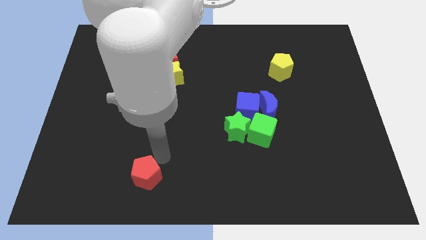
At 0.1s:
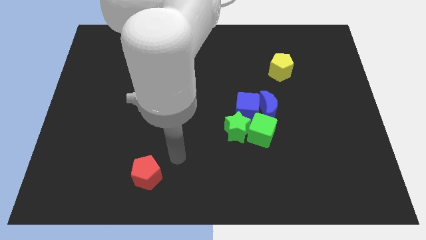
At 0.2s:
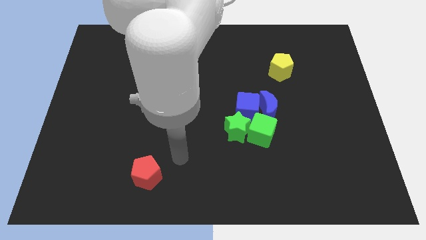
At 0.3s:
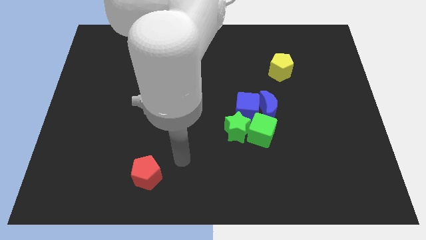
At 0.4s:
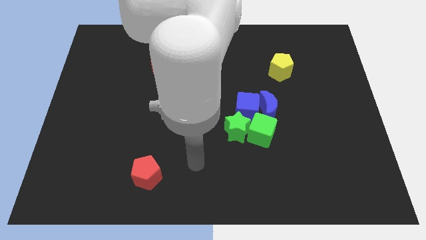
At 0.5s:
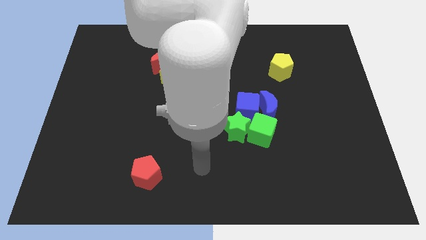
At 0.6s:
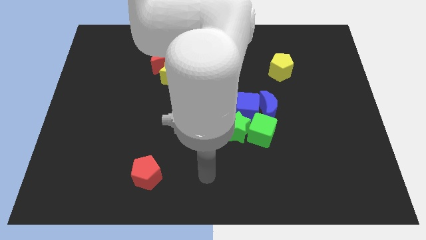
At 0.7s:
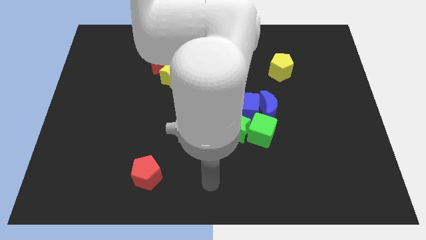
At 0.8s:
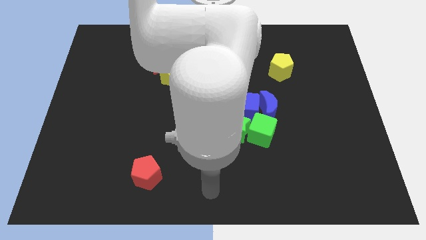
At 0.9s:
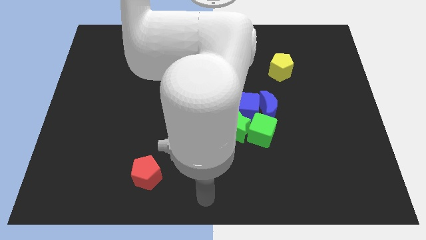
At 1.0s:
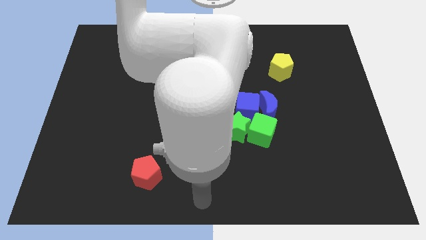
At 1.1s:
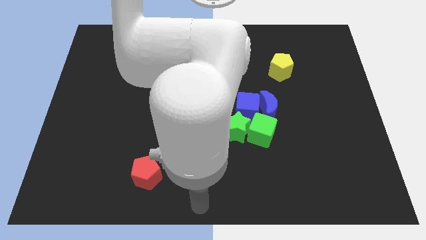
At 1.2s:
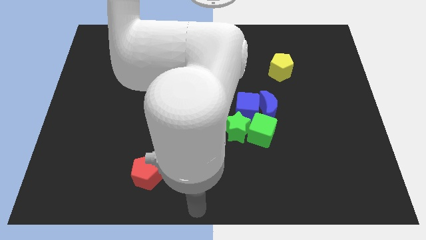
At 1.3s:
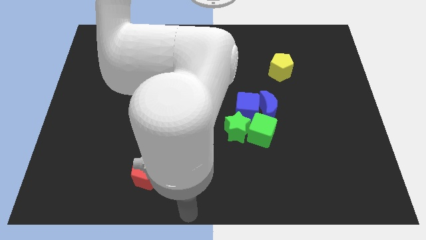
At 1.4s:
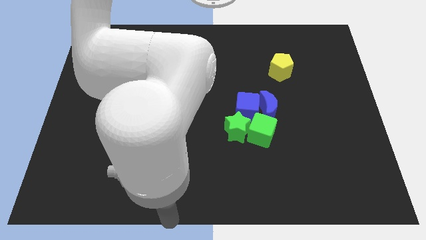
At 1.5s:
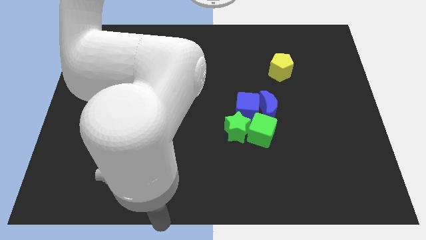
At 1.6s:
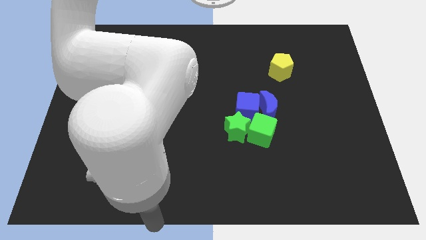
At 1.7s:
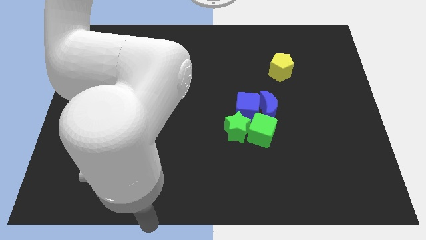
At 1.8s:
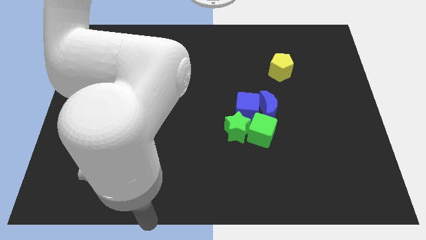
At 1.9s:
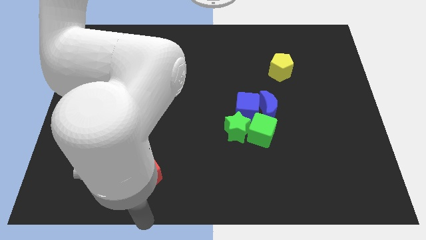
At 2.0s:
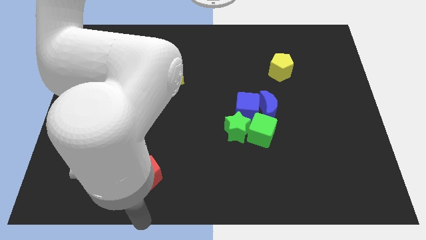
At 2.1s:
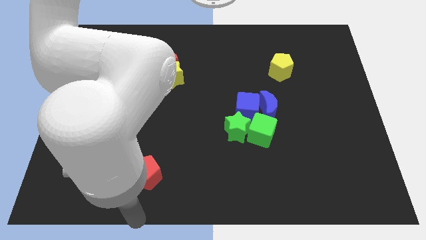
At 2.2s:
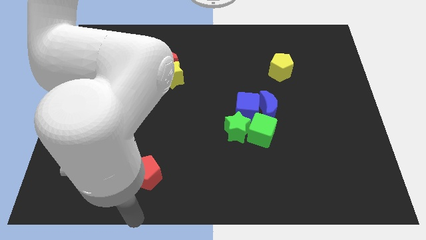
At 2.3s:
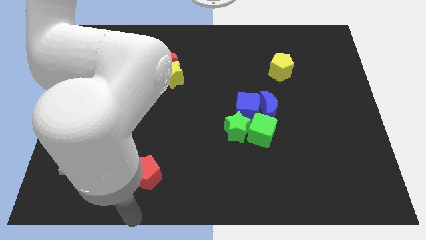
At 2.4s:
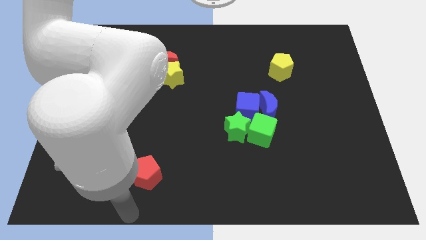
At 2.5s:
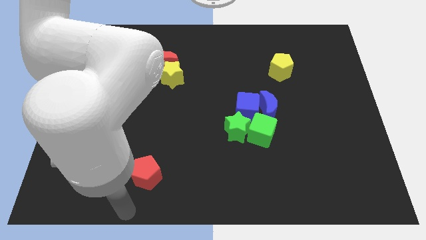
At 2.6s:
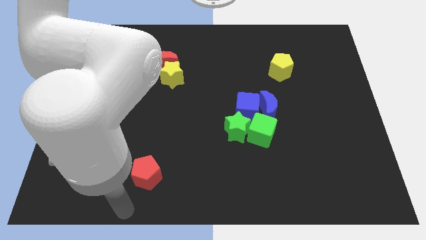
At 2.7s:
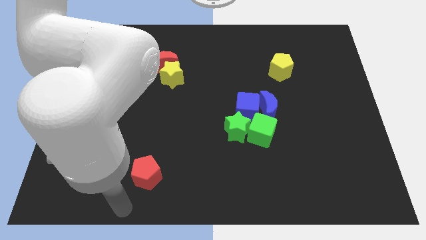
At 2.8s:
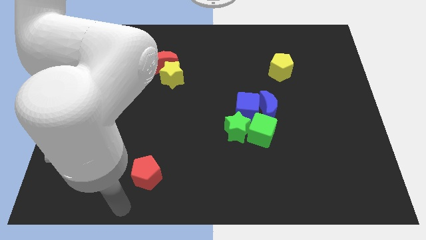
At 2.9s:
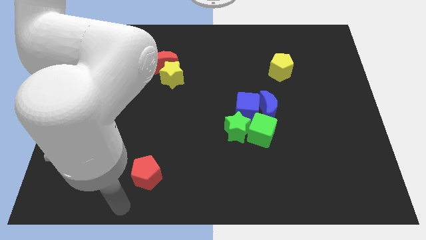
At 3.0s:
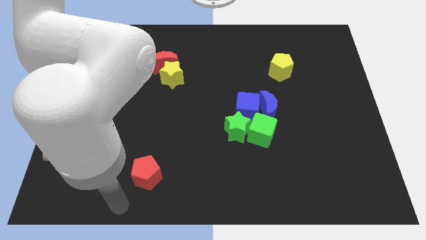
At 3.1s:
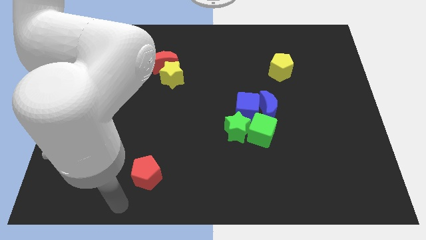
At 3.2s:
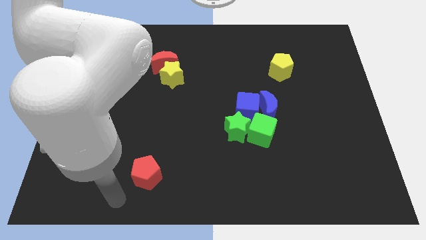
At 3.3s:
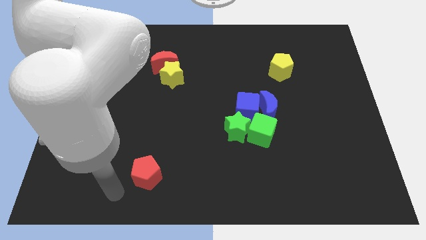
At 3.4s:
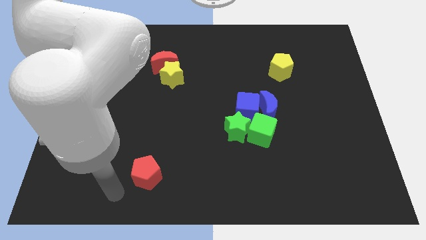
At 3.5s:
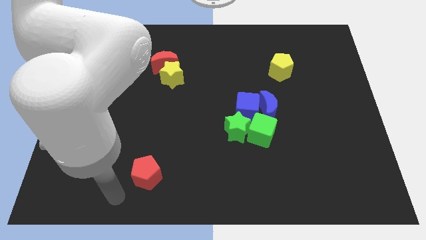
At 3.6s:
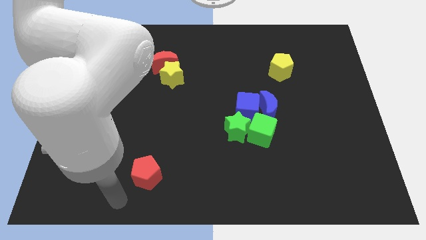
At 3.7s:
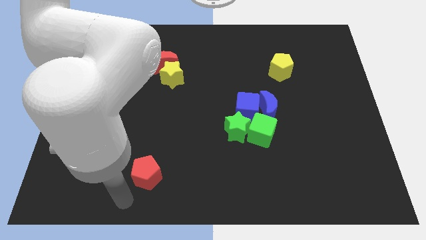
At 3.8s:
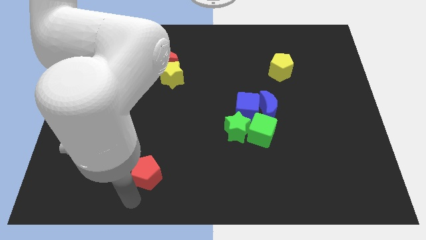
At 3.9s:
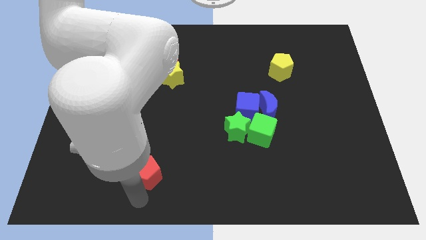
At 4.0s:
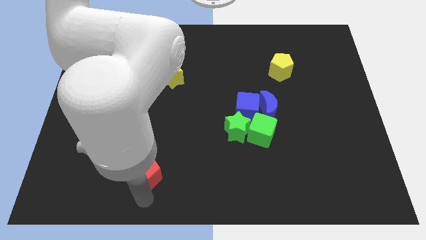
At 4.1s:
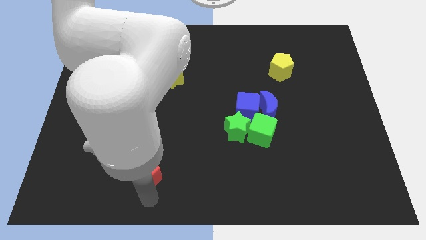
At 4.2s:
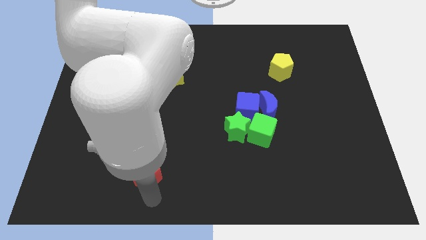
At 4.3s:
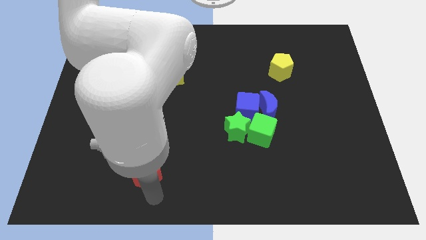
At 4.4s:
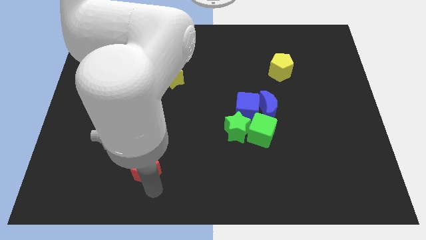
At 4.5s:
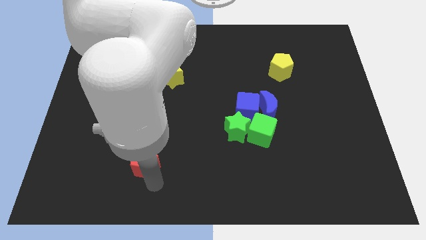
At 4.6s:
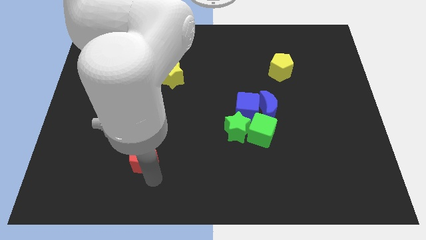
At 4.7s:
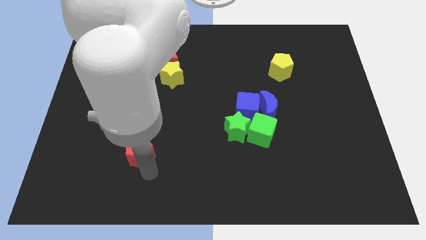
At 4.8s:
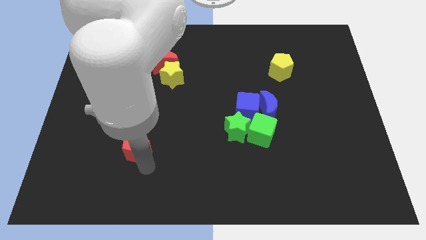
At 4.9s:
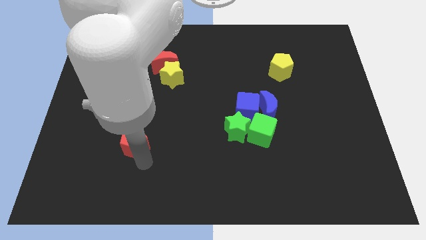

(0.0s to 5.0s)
drag the red pentagon slightly upwards

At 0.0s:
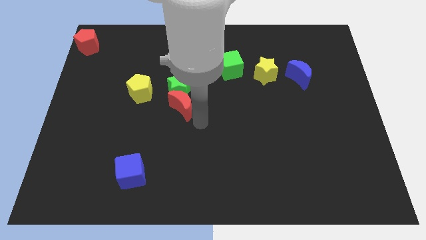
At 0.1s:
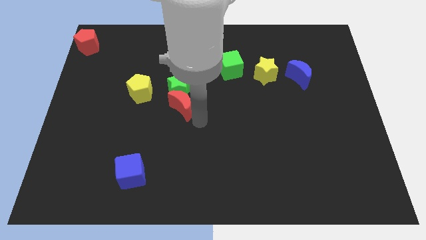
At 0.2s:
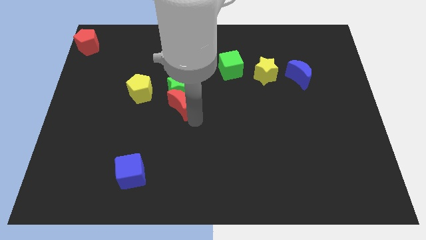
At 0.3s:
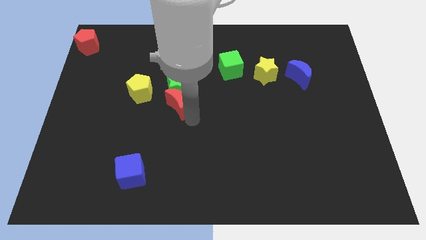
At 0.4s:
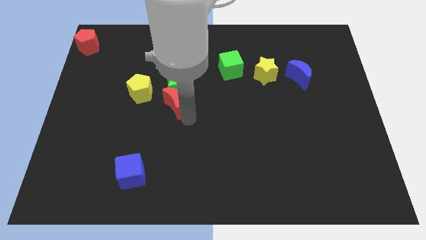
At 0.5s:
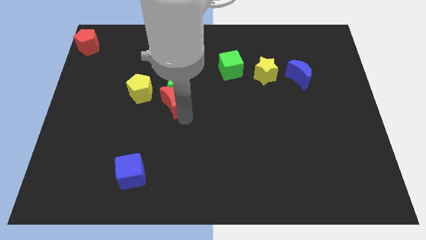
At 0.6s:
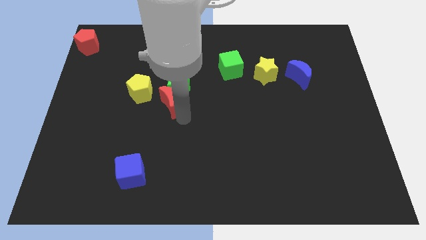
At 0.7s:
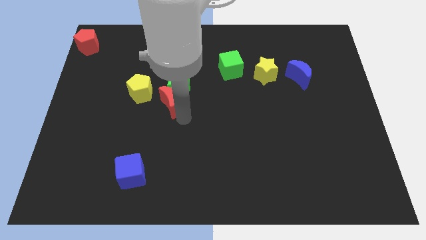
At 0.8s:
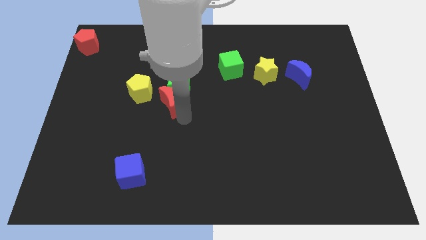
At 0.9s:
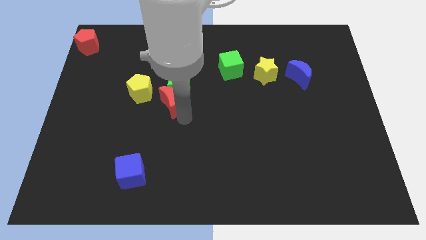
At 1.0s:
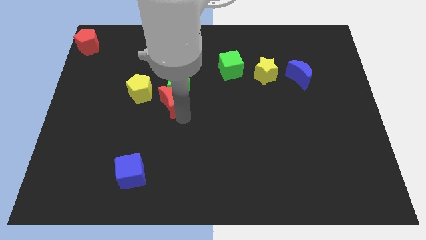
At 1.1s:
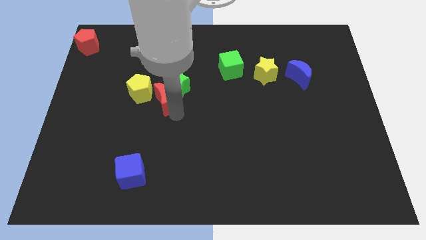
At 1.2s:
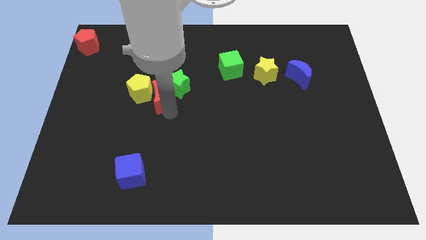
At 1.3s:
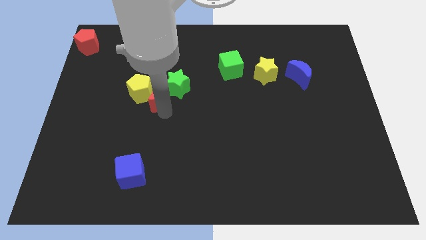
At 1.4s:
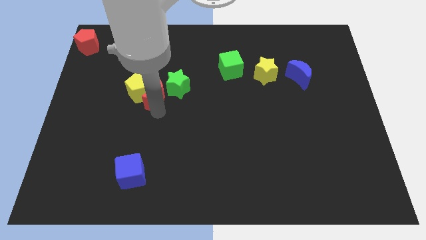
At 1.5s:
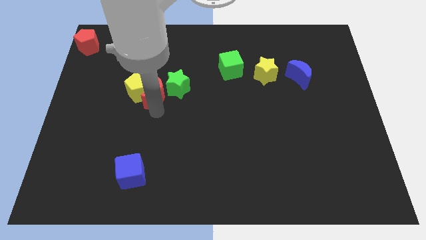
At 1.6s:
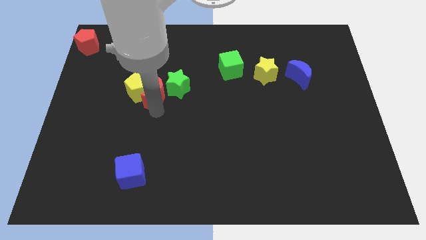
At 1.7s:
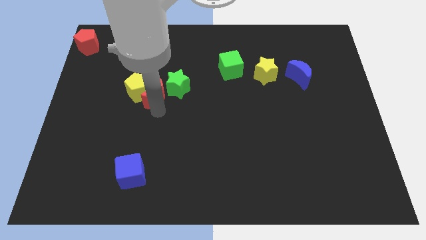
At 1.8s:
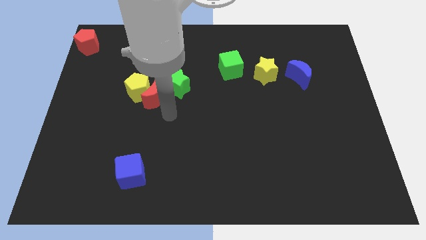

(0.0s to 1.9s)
move the red crescent towards the bottom left of the yellow pentagon

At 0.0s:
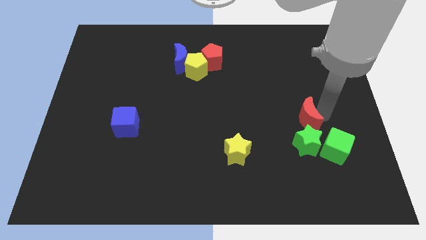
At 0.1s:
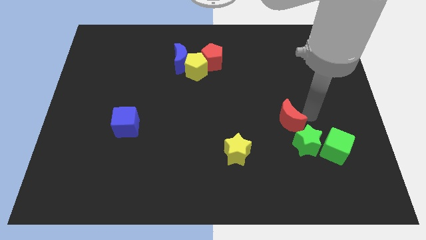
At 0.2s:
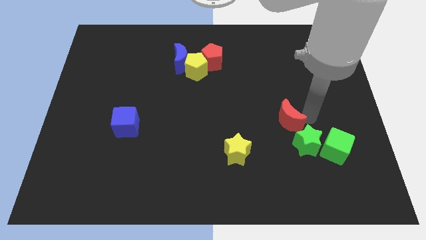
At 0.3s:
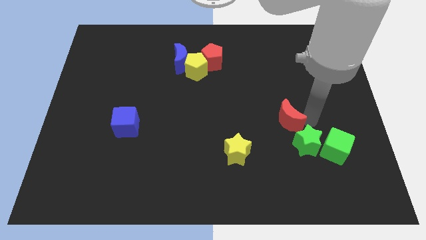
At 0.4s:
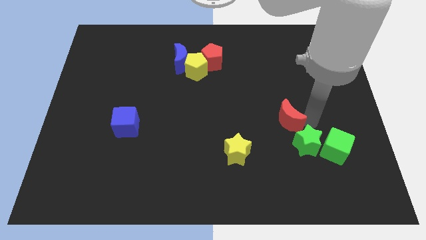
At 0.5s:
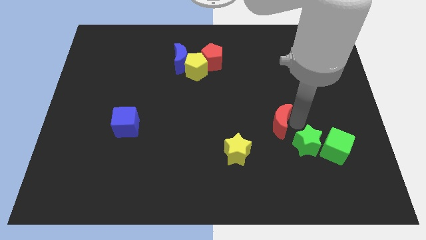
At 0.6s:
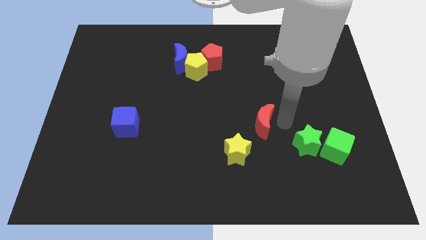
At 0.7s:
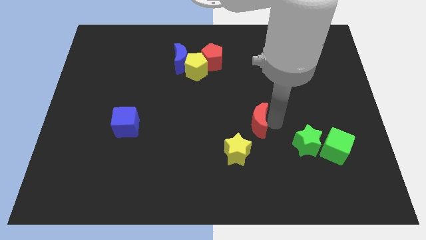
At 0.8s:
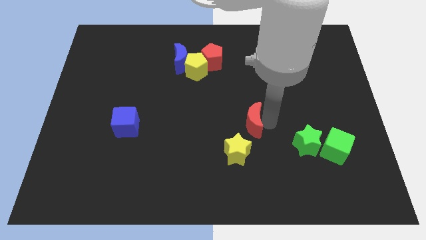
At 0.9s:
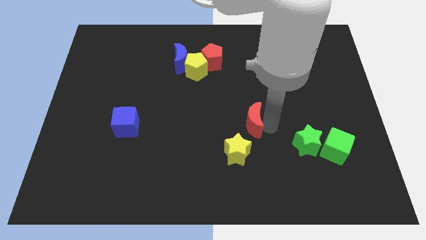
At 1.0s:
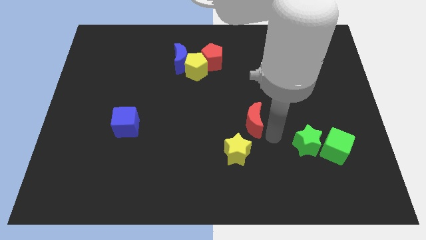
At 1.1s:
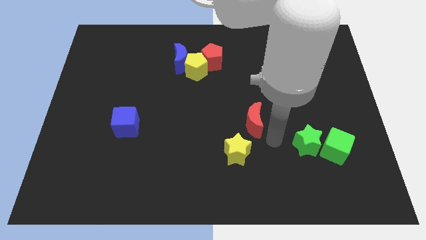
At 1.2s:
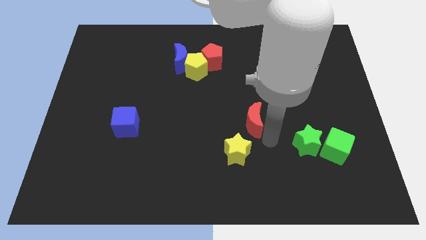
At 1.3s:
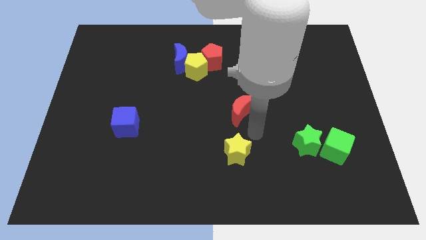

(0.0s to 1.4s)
move the red crescent to the top of the yellow star

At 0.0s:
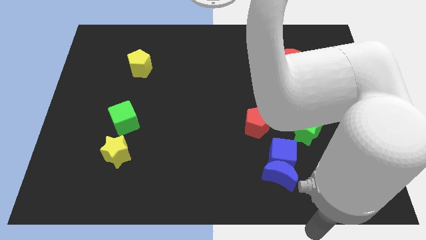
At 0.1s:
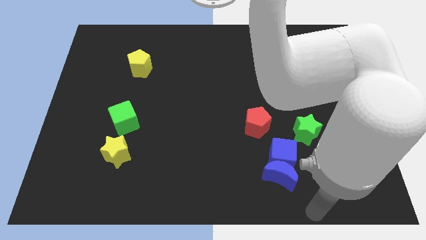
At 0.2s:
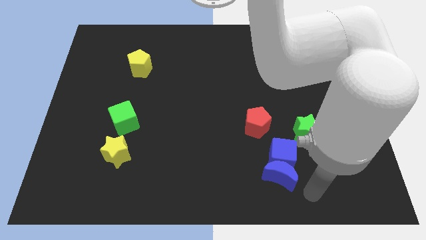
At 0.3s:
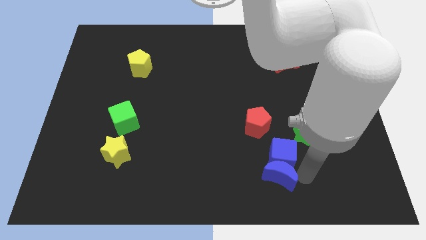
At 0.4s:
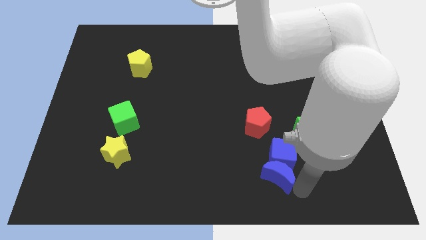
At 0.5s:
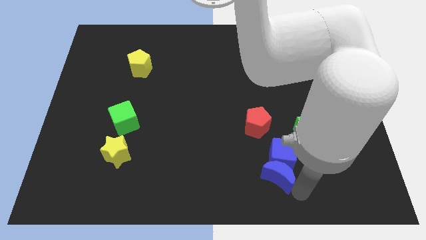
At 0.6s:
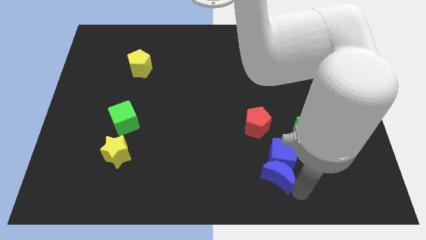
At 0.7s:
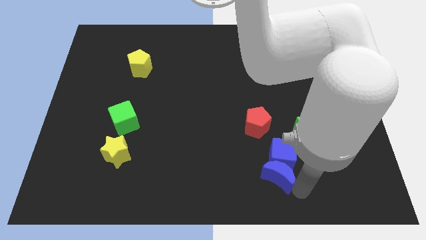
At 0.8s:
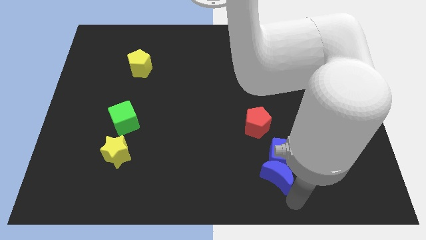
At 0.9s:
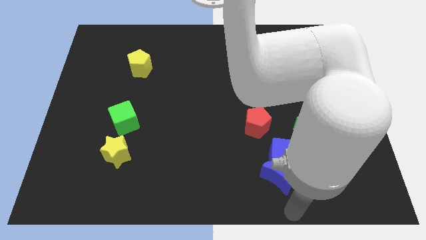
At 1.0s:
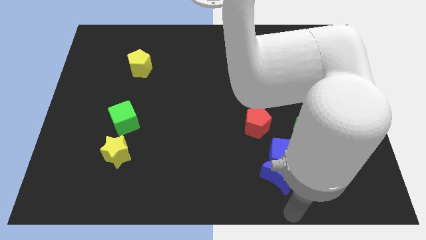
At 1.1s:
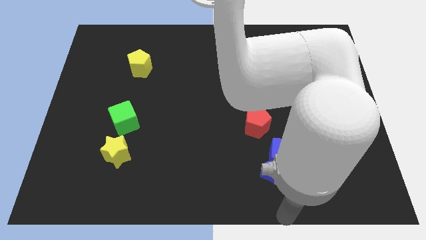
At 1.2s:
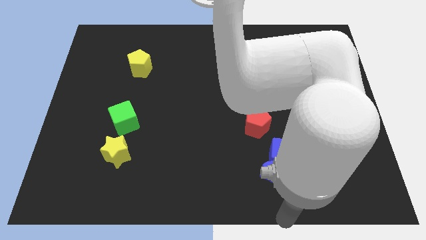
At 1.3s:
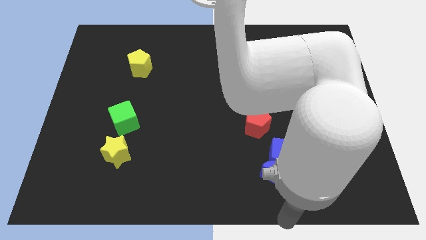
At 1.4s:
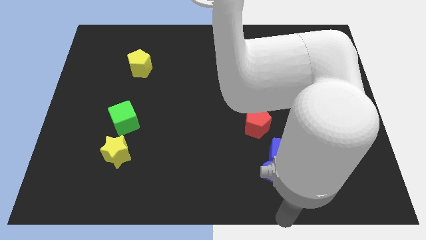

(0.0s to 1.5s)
push the blue moon downwards slightly
